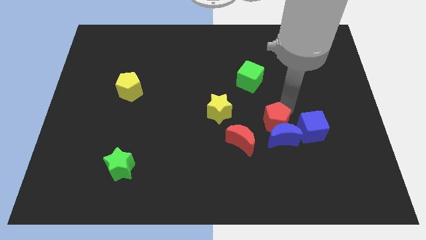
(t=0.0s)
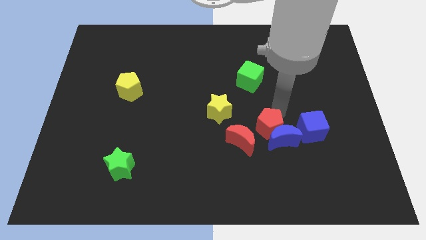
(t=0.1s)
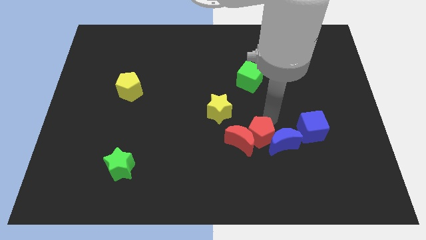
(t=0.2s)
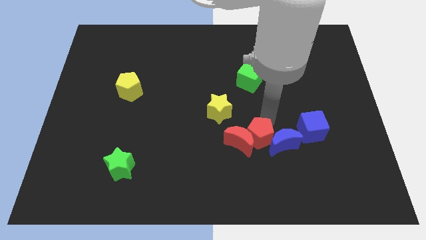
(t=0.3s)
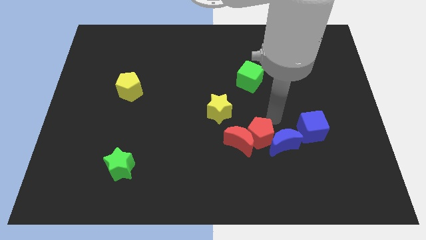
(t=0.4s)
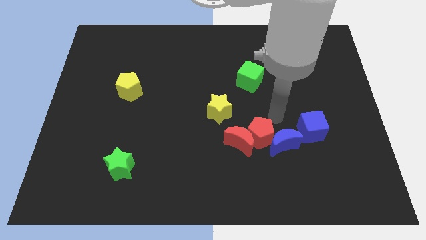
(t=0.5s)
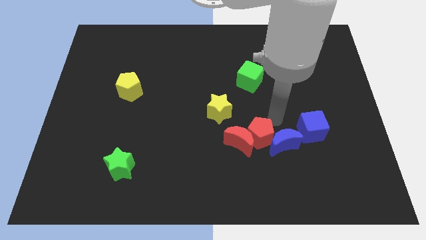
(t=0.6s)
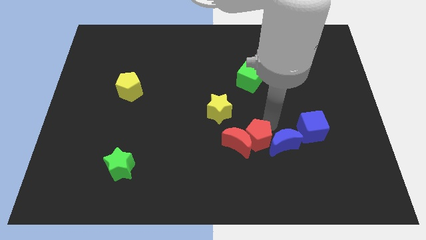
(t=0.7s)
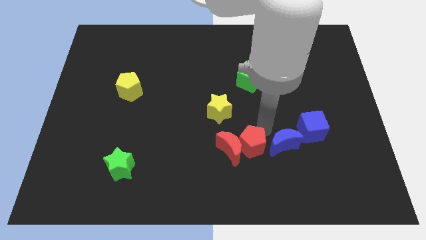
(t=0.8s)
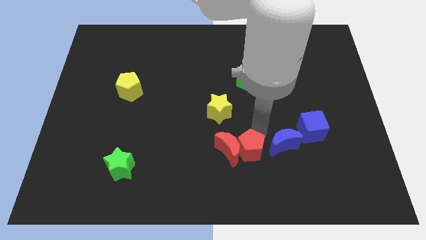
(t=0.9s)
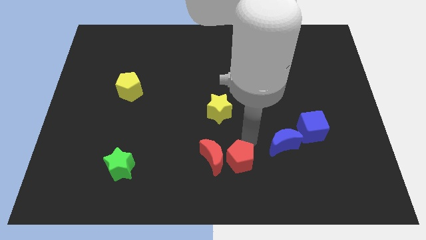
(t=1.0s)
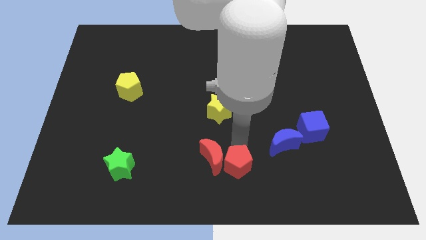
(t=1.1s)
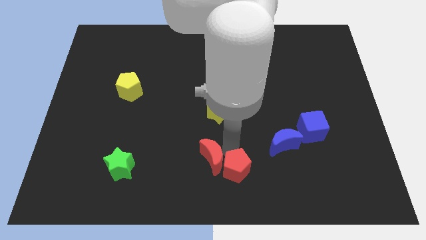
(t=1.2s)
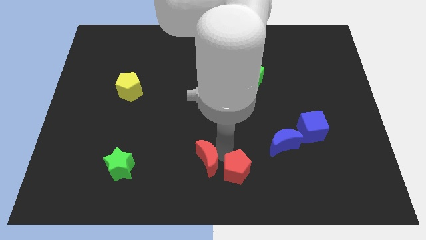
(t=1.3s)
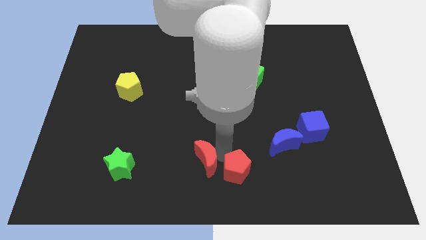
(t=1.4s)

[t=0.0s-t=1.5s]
push the red blocks towards the bottom

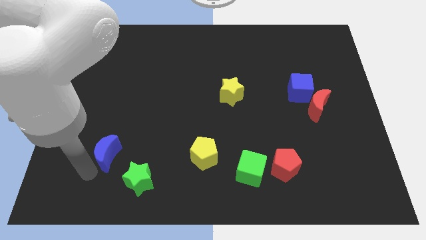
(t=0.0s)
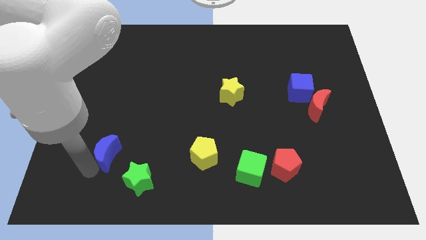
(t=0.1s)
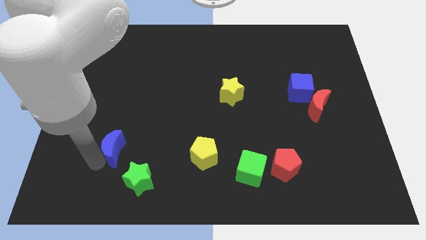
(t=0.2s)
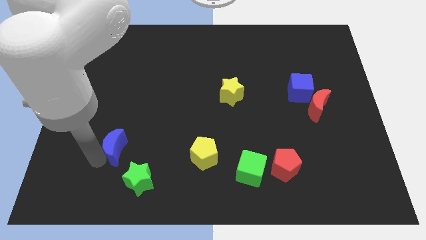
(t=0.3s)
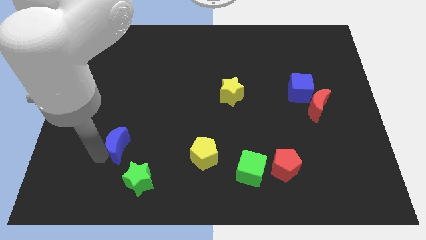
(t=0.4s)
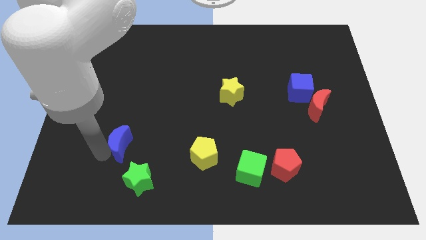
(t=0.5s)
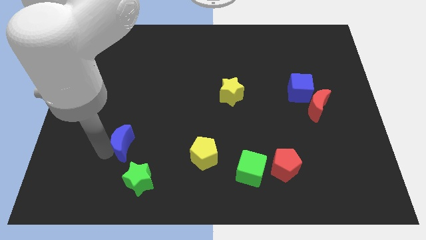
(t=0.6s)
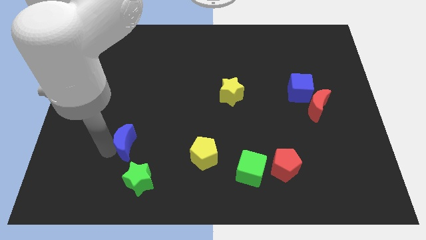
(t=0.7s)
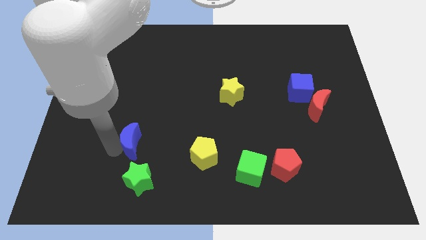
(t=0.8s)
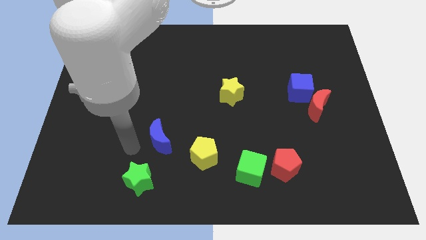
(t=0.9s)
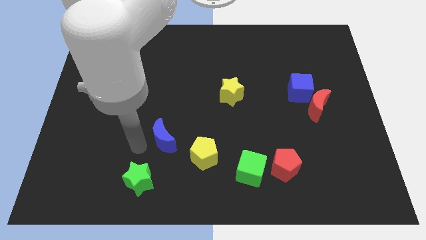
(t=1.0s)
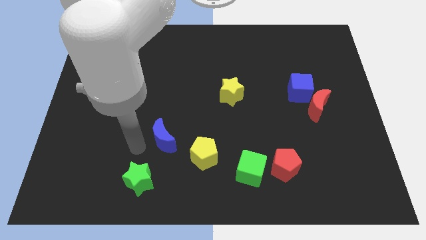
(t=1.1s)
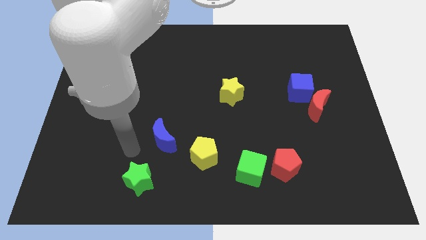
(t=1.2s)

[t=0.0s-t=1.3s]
push the blue moon towards yellow pentagon

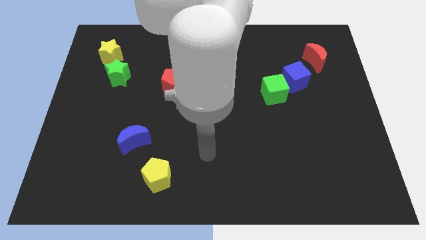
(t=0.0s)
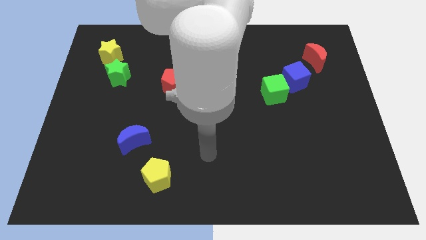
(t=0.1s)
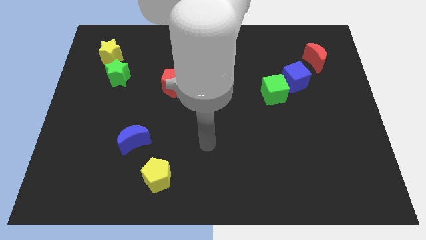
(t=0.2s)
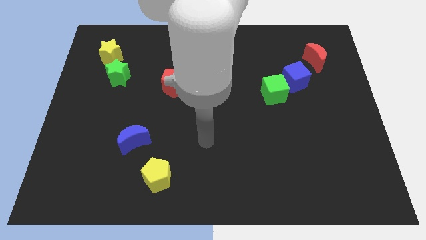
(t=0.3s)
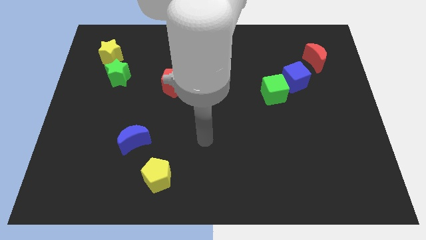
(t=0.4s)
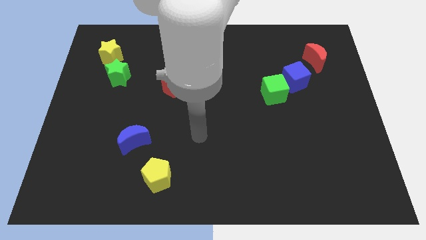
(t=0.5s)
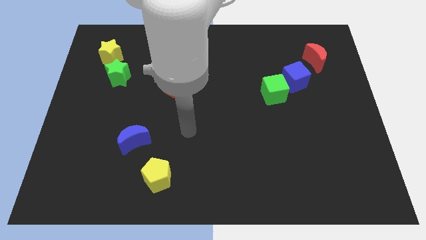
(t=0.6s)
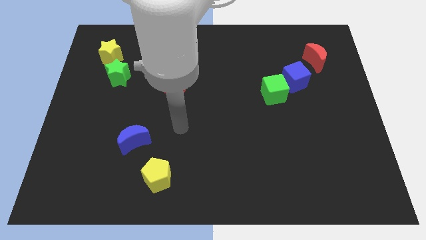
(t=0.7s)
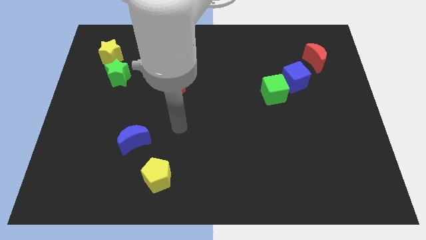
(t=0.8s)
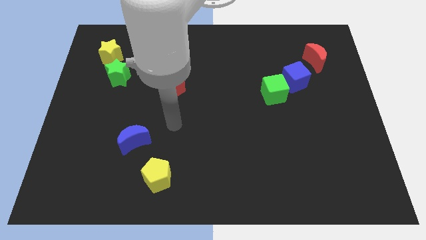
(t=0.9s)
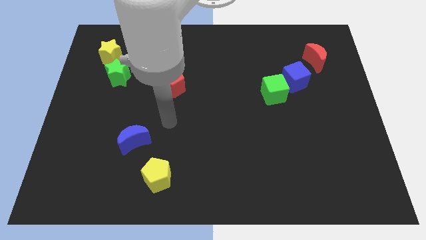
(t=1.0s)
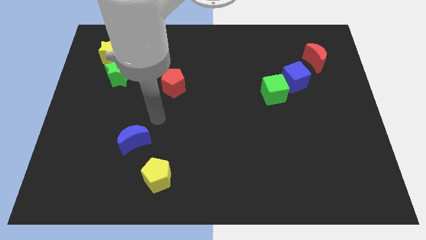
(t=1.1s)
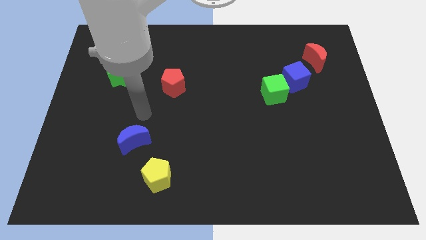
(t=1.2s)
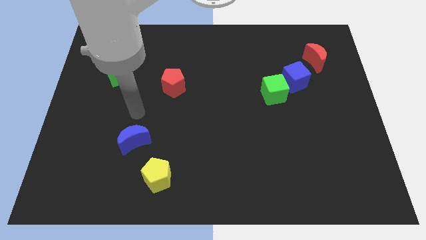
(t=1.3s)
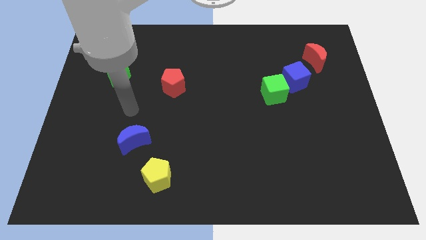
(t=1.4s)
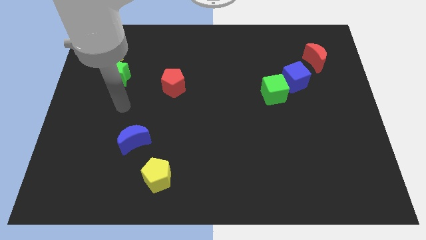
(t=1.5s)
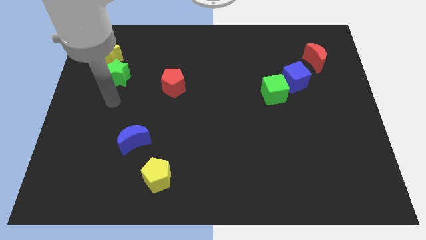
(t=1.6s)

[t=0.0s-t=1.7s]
move close to the green star

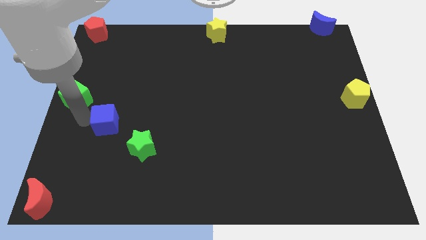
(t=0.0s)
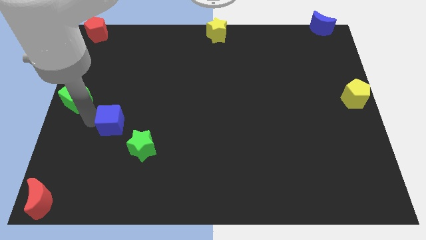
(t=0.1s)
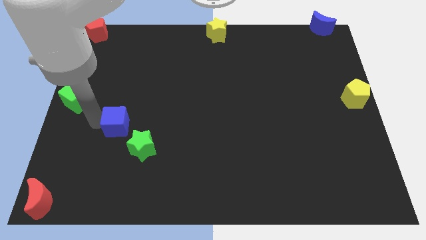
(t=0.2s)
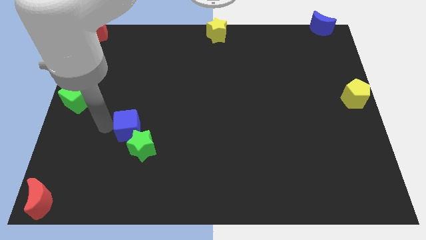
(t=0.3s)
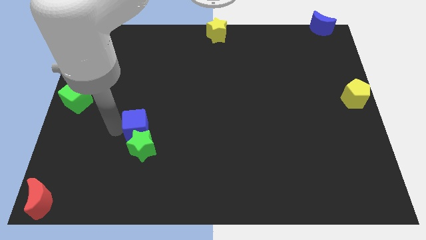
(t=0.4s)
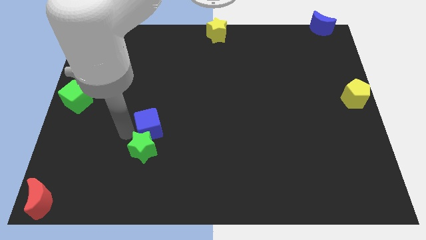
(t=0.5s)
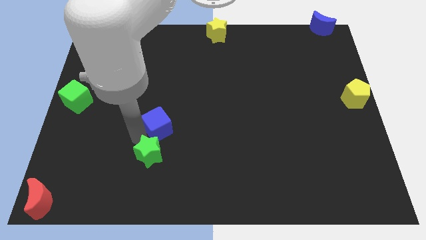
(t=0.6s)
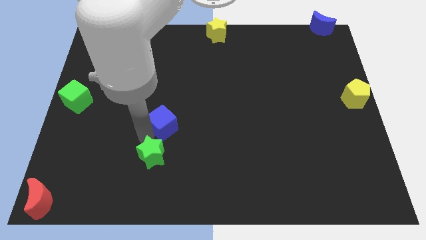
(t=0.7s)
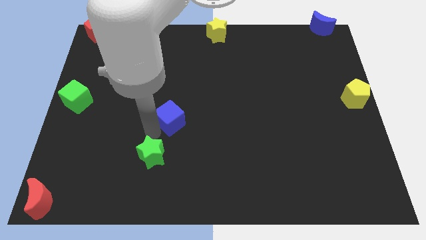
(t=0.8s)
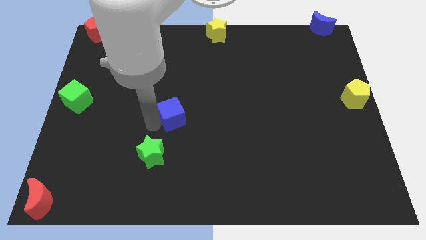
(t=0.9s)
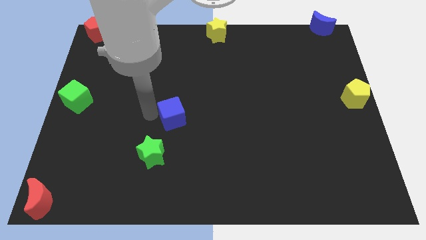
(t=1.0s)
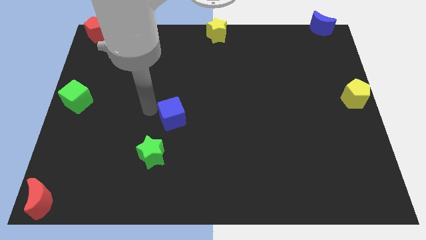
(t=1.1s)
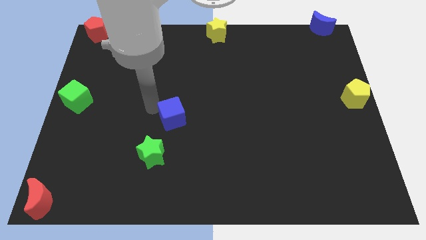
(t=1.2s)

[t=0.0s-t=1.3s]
drag the blue cube to the right side of the board

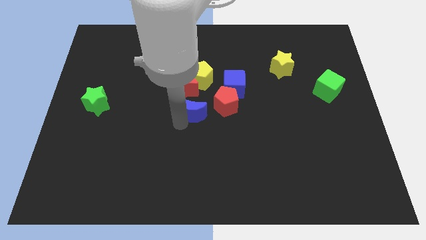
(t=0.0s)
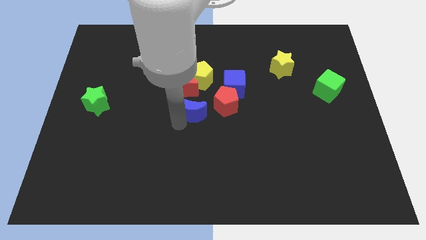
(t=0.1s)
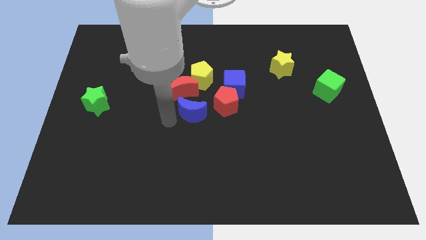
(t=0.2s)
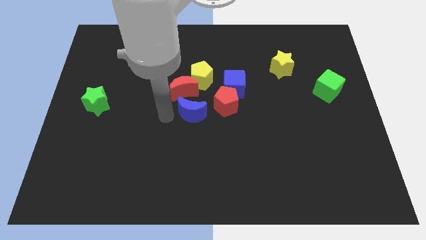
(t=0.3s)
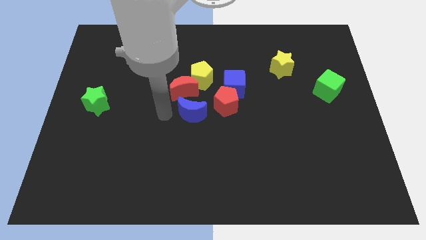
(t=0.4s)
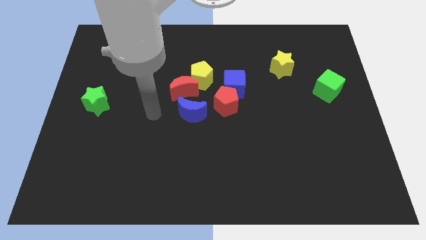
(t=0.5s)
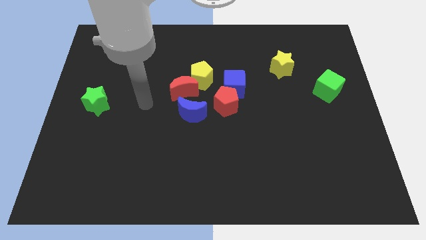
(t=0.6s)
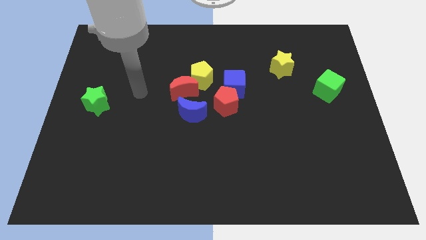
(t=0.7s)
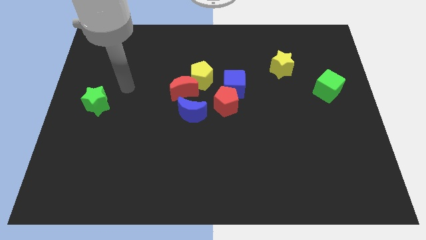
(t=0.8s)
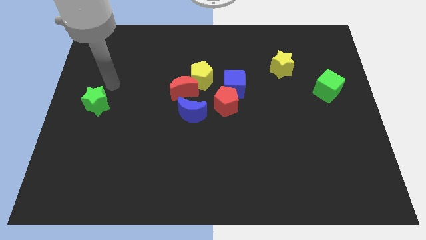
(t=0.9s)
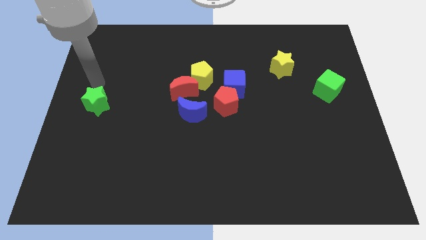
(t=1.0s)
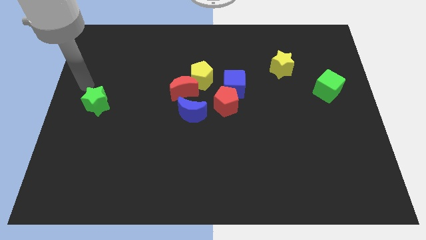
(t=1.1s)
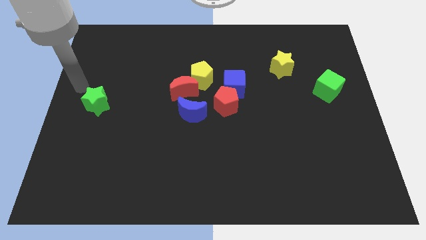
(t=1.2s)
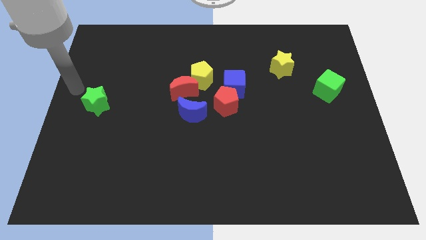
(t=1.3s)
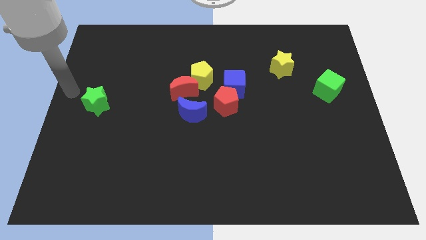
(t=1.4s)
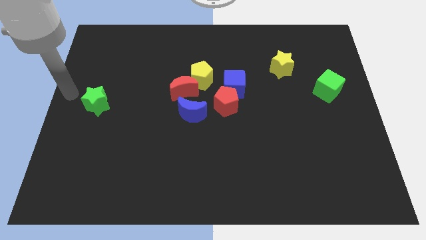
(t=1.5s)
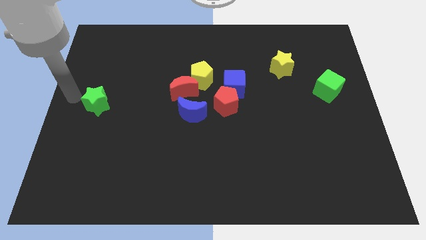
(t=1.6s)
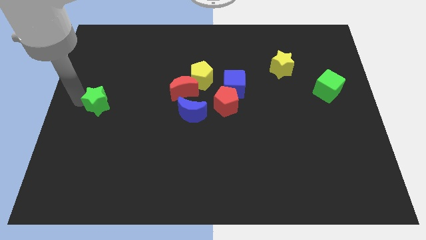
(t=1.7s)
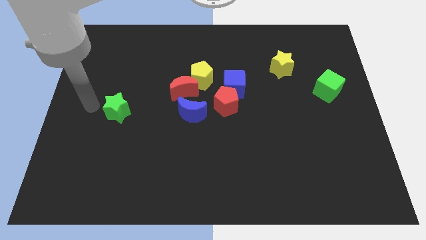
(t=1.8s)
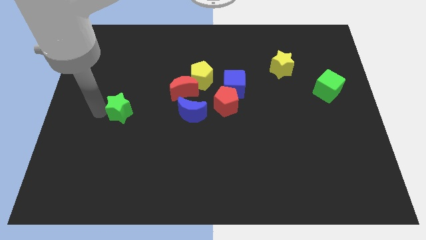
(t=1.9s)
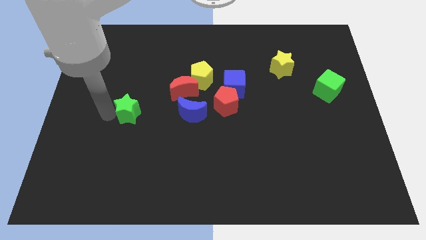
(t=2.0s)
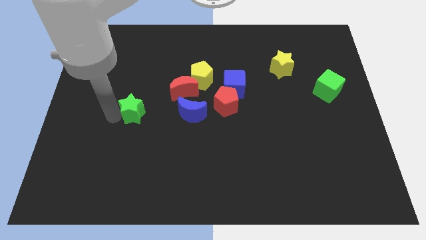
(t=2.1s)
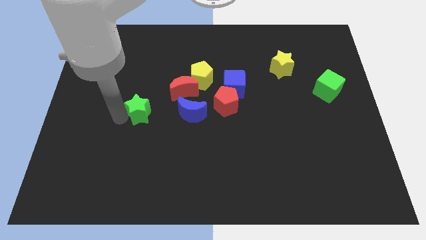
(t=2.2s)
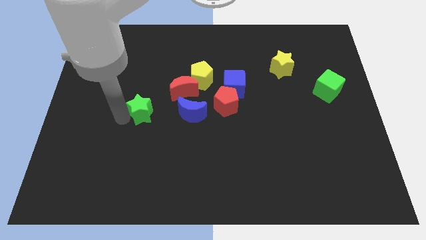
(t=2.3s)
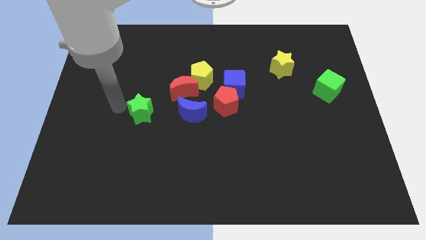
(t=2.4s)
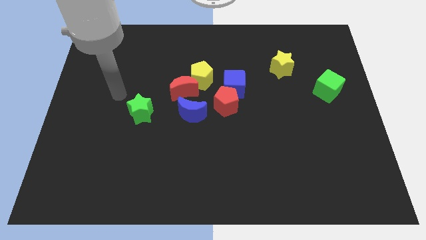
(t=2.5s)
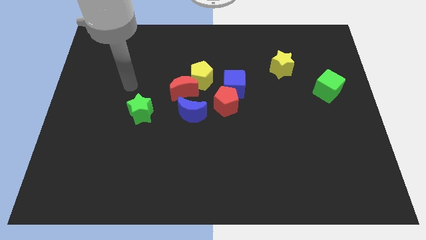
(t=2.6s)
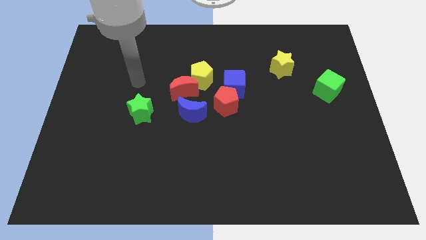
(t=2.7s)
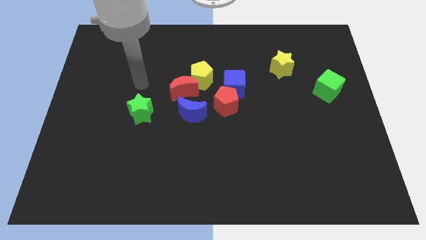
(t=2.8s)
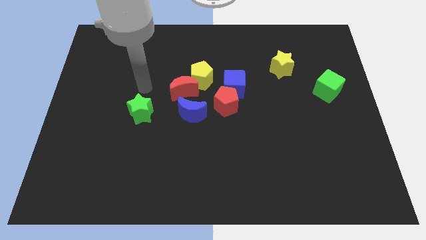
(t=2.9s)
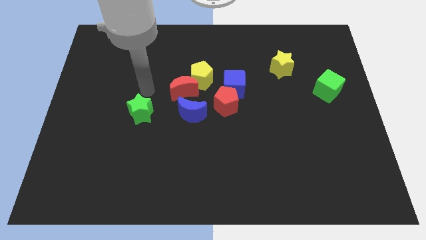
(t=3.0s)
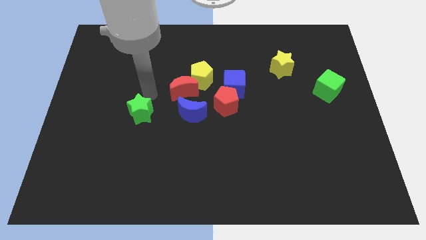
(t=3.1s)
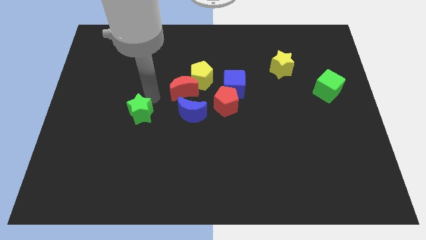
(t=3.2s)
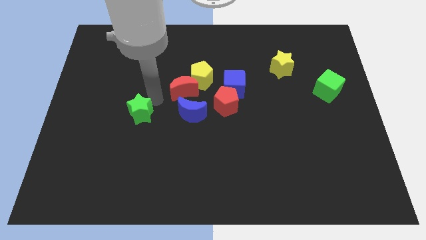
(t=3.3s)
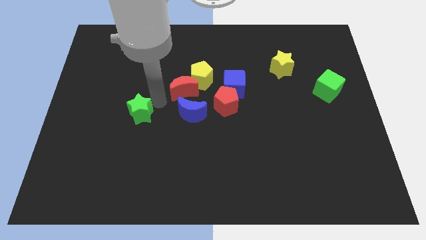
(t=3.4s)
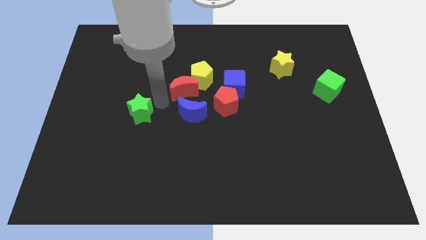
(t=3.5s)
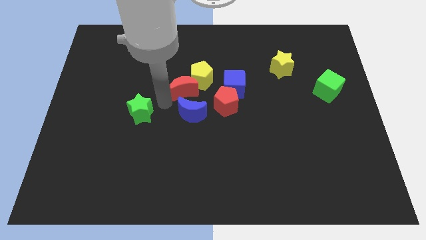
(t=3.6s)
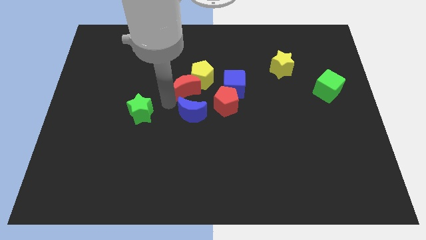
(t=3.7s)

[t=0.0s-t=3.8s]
place the green star left to the blue moon
